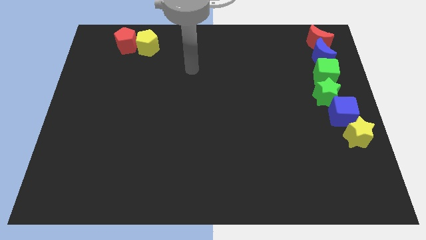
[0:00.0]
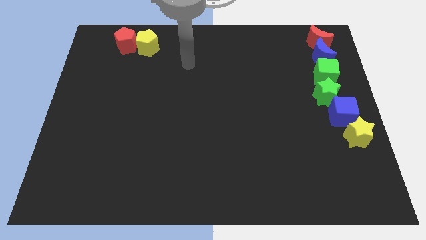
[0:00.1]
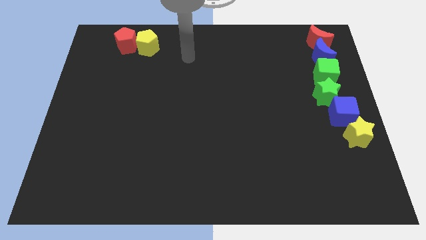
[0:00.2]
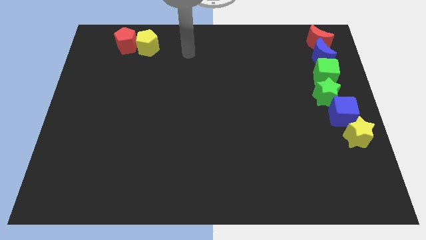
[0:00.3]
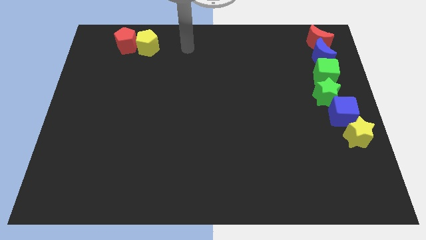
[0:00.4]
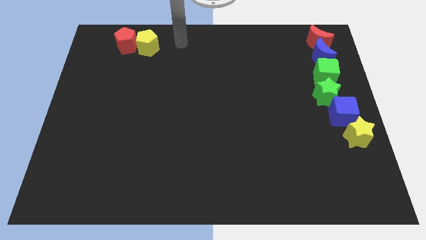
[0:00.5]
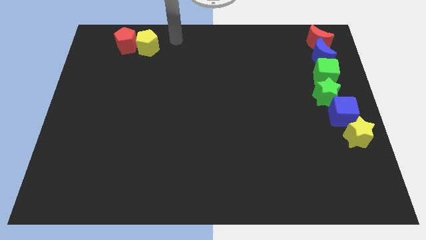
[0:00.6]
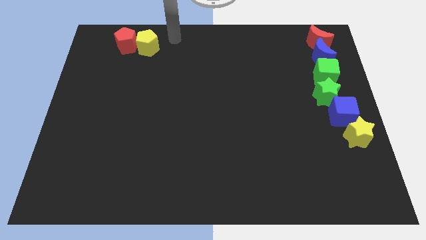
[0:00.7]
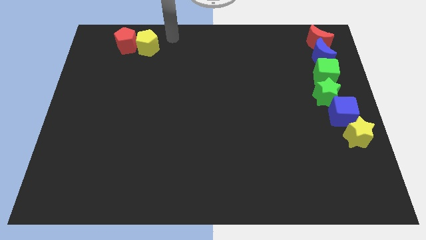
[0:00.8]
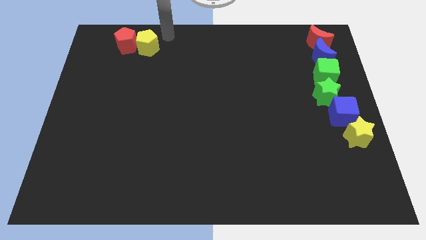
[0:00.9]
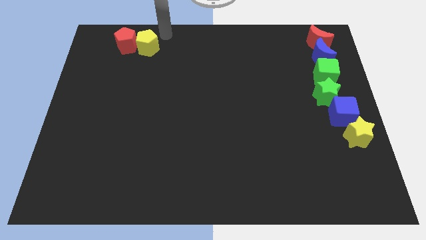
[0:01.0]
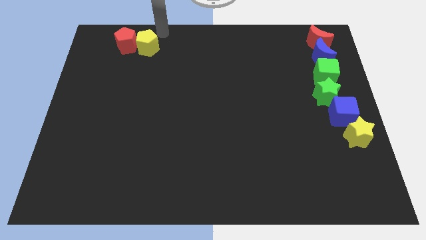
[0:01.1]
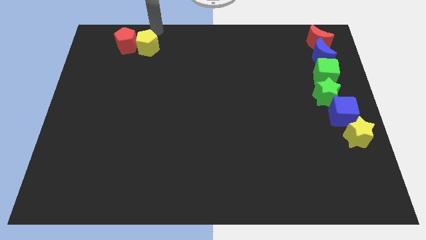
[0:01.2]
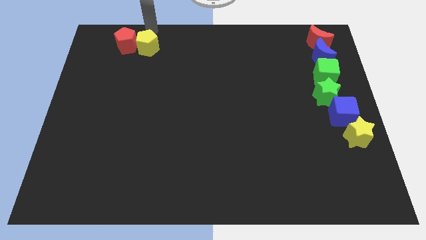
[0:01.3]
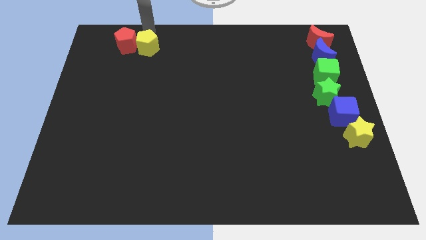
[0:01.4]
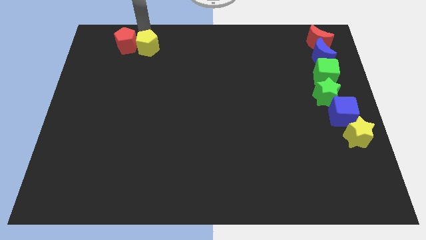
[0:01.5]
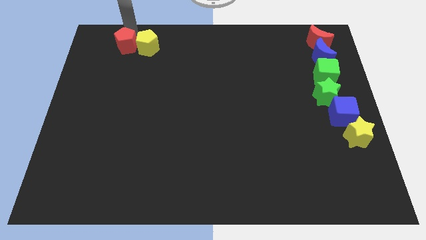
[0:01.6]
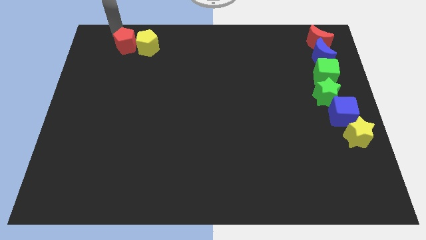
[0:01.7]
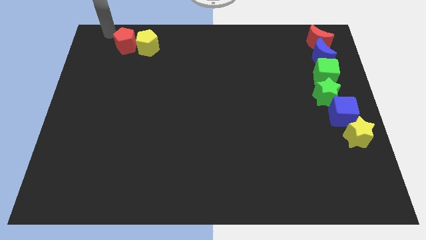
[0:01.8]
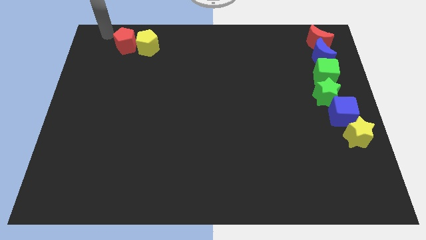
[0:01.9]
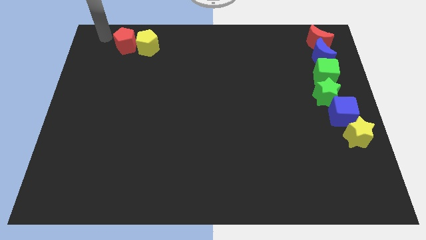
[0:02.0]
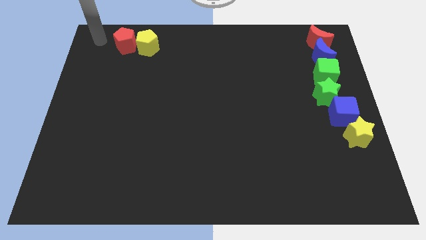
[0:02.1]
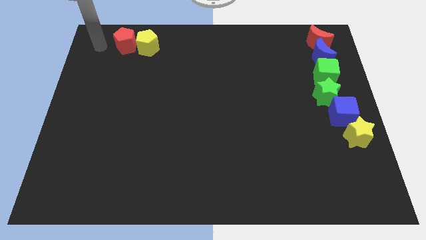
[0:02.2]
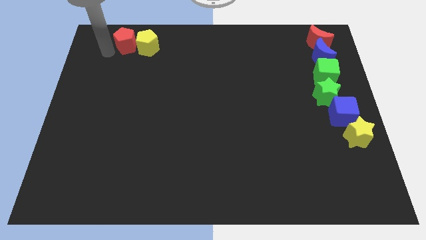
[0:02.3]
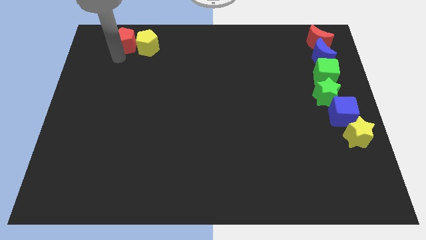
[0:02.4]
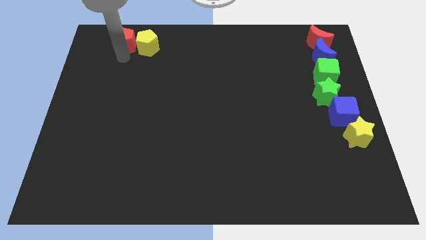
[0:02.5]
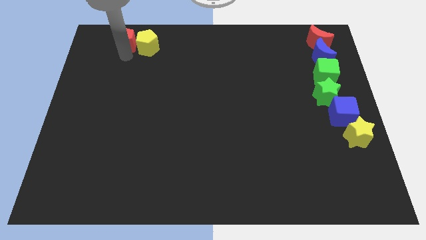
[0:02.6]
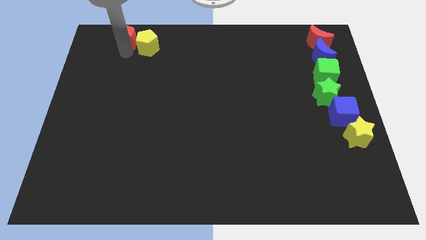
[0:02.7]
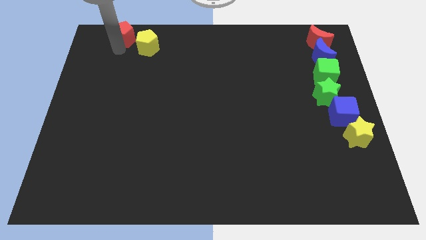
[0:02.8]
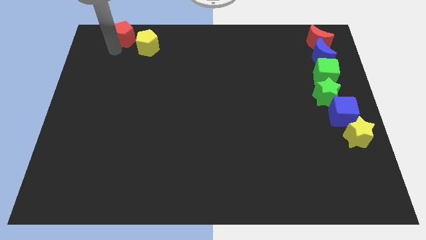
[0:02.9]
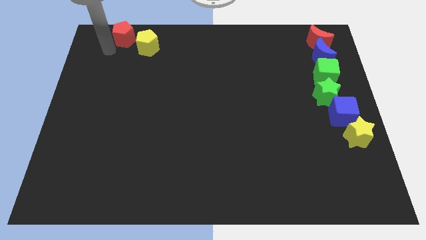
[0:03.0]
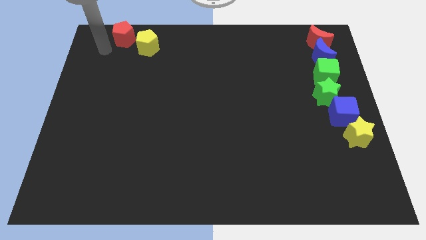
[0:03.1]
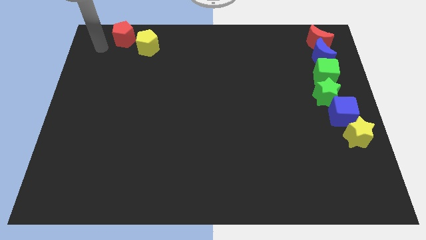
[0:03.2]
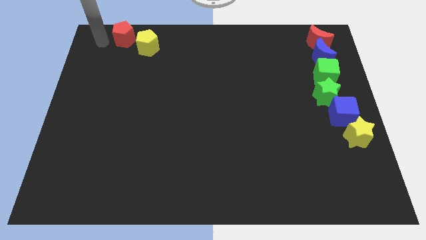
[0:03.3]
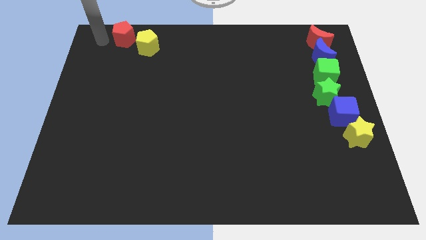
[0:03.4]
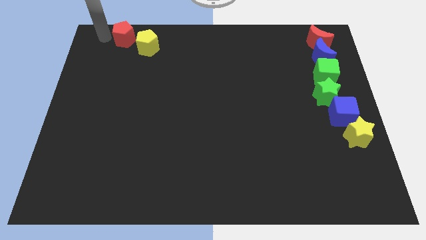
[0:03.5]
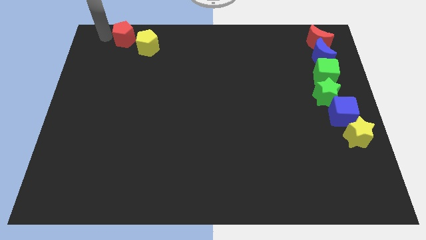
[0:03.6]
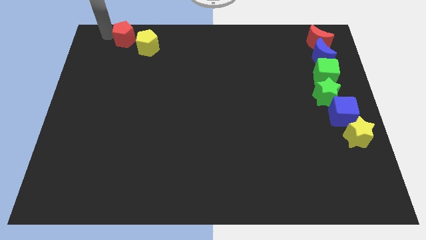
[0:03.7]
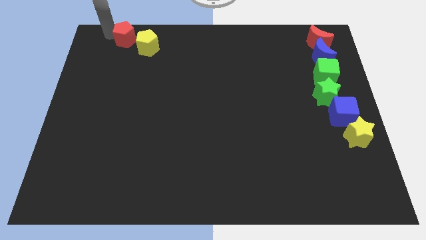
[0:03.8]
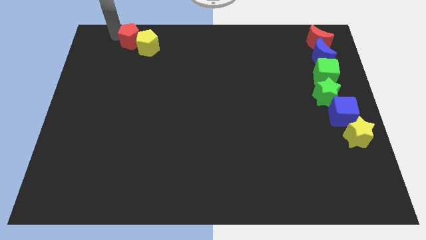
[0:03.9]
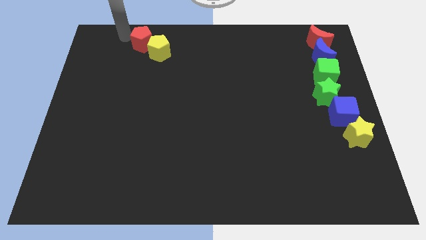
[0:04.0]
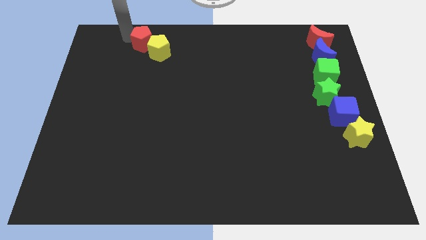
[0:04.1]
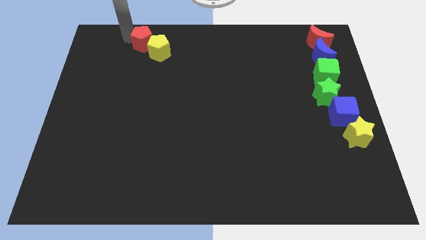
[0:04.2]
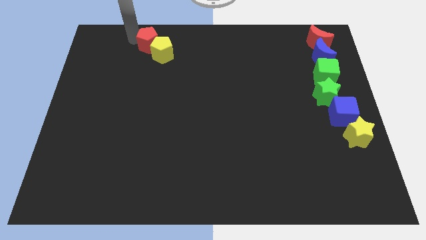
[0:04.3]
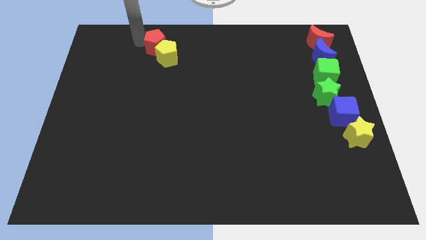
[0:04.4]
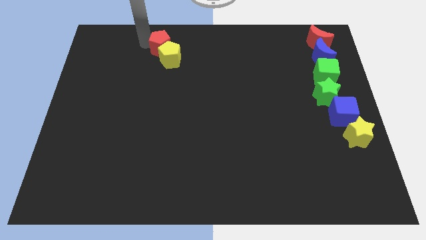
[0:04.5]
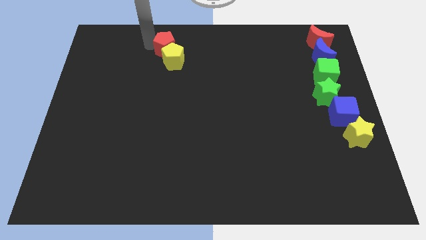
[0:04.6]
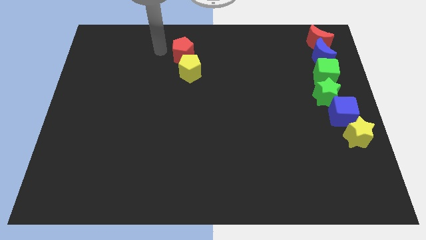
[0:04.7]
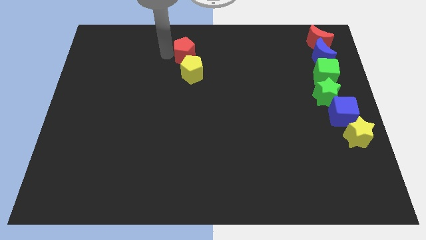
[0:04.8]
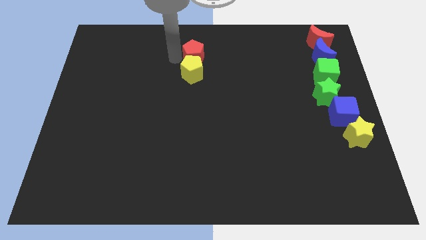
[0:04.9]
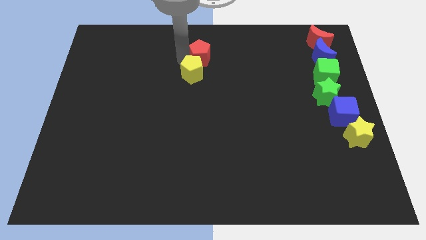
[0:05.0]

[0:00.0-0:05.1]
push the yellow pentagon with the red pentagon towards the center of the board

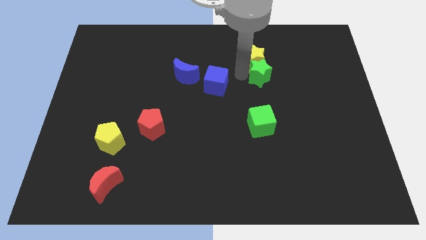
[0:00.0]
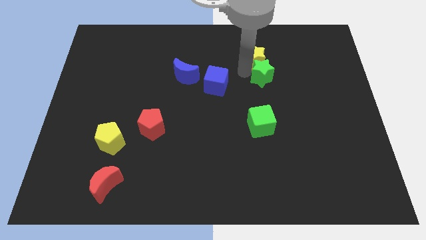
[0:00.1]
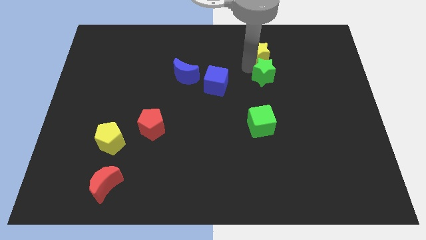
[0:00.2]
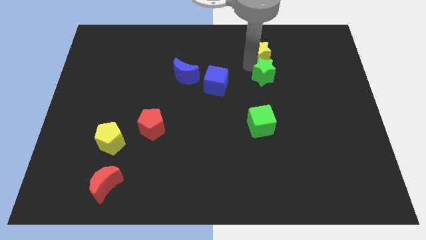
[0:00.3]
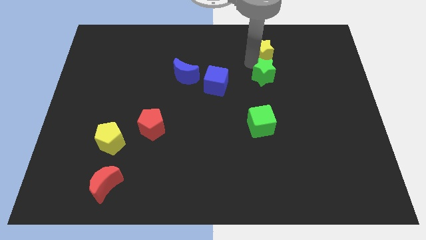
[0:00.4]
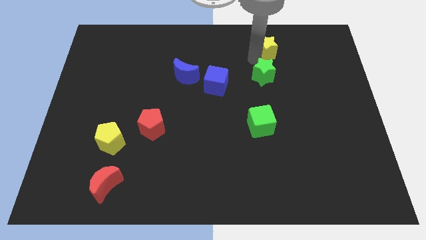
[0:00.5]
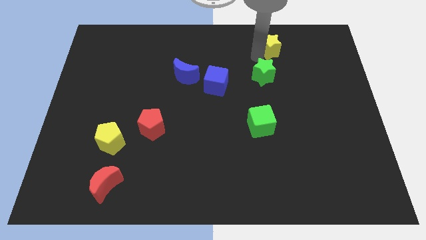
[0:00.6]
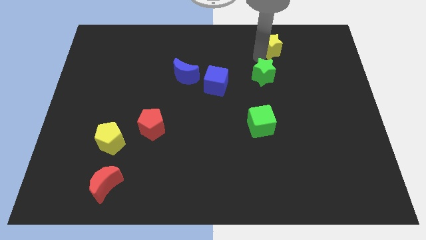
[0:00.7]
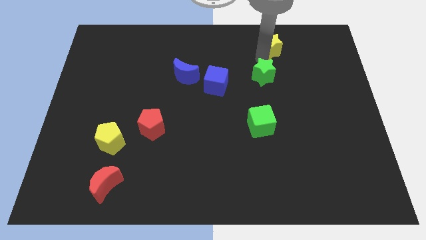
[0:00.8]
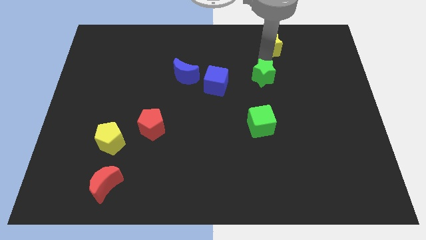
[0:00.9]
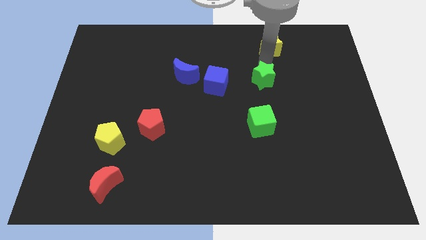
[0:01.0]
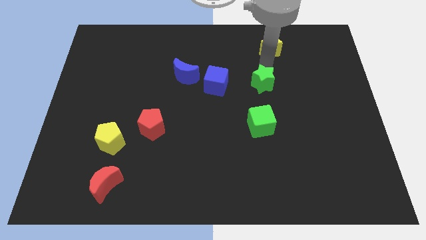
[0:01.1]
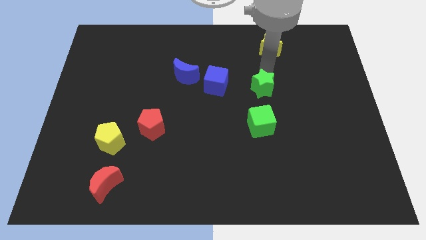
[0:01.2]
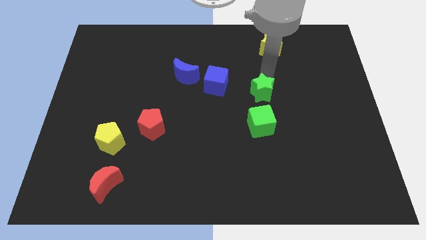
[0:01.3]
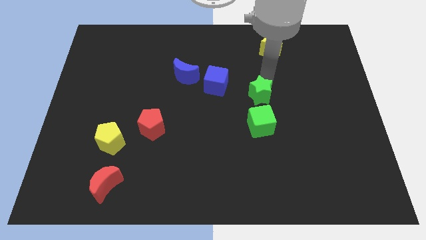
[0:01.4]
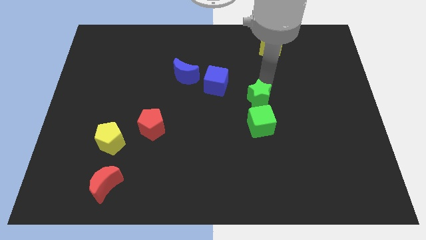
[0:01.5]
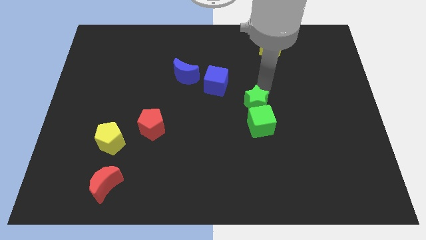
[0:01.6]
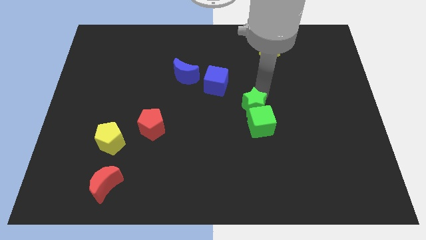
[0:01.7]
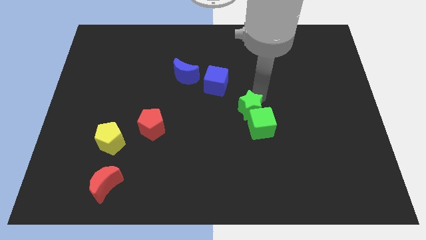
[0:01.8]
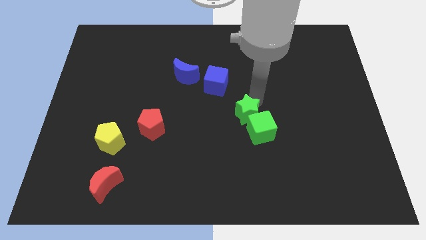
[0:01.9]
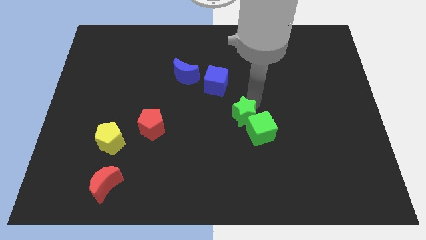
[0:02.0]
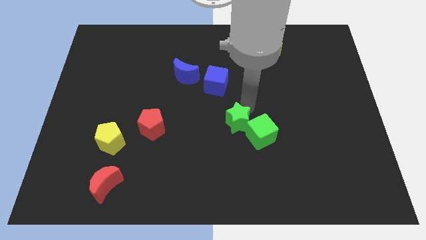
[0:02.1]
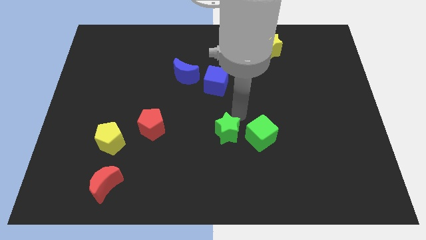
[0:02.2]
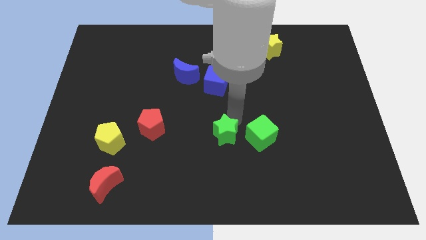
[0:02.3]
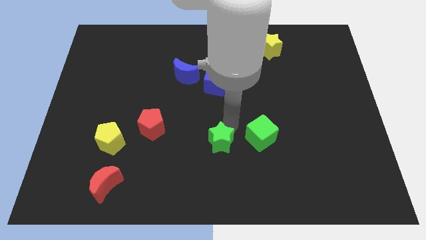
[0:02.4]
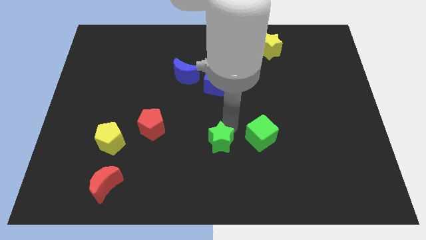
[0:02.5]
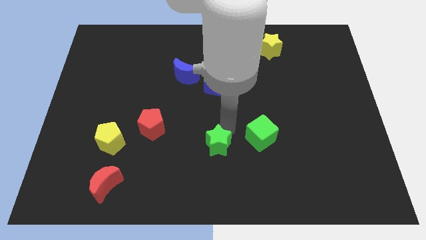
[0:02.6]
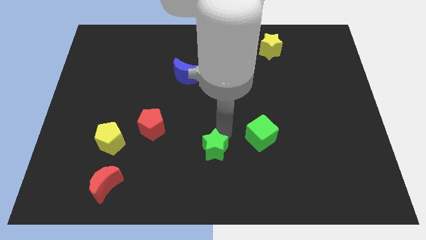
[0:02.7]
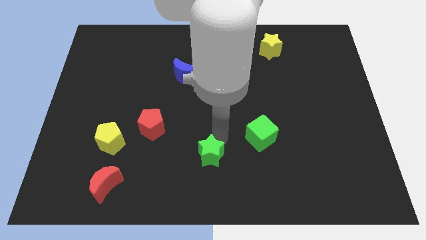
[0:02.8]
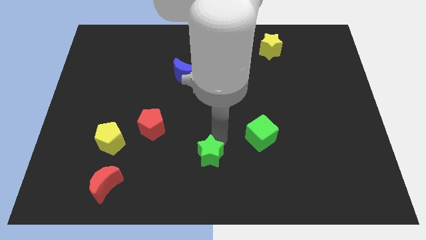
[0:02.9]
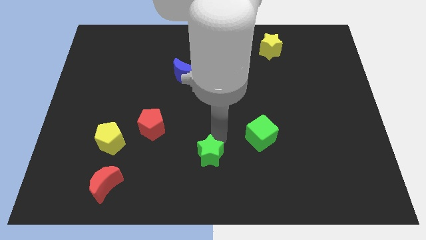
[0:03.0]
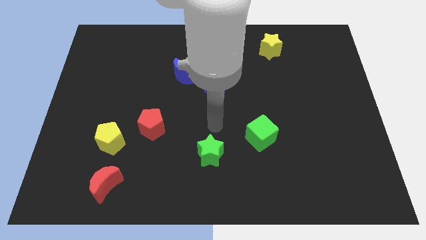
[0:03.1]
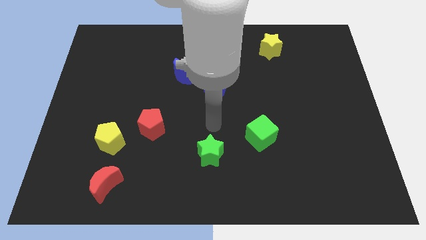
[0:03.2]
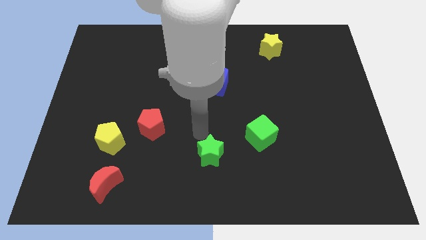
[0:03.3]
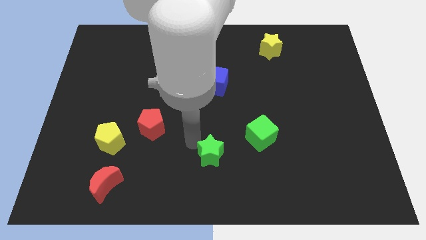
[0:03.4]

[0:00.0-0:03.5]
push green star below blue cube

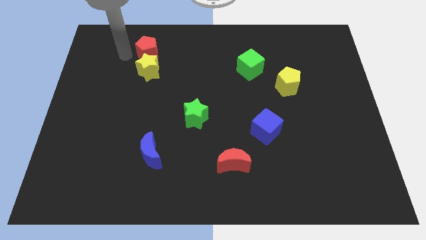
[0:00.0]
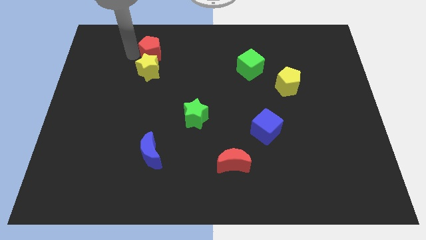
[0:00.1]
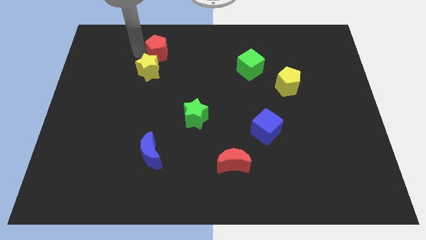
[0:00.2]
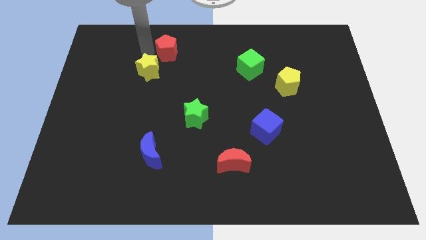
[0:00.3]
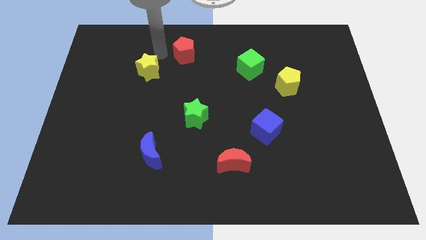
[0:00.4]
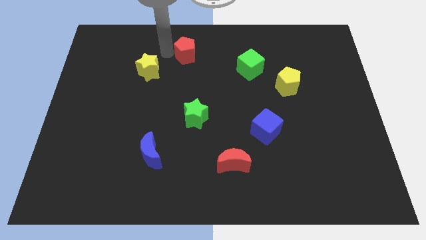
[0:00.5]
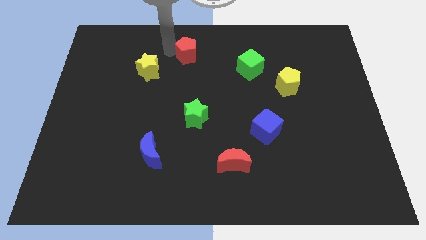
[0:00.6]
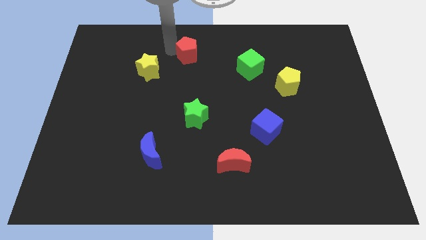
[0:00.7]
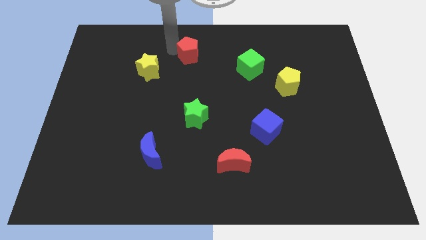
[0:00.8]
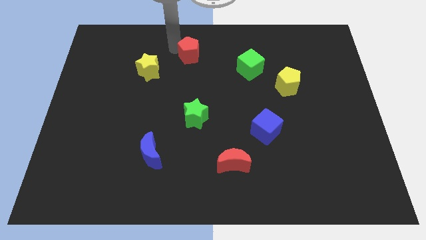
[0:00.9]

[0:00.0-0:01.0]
separate the red pentagon from the yellow star
